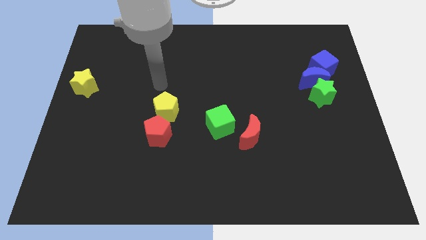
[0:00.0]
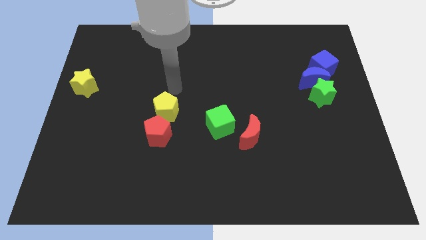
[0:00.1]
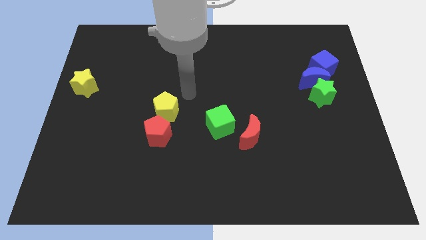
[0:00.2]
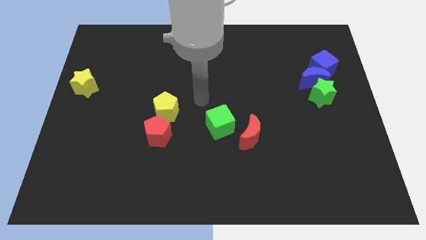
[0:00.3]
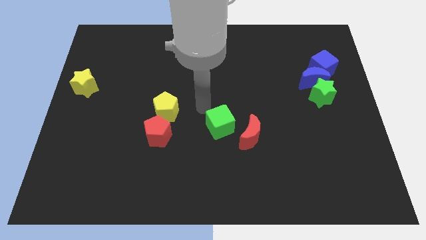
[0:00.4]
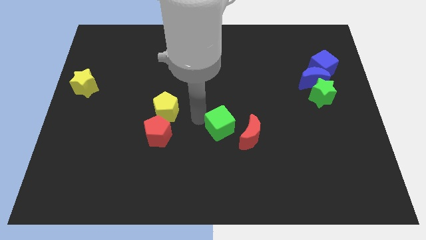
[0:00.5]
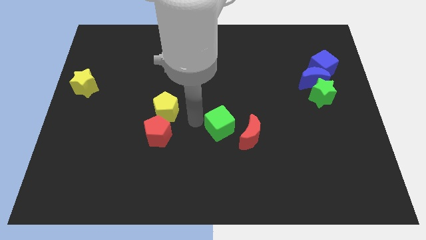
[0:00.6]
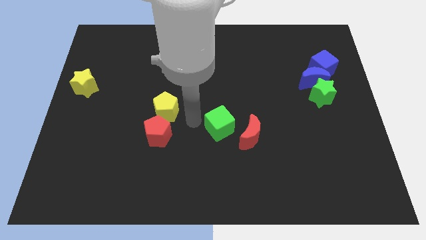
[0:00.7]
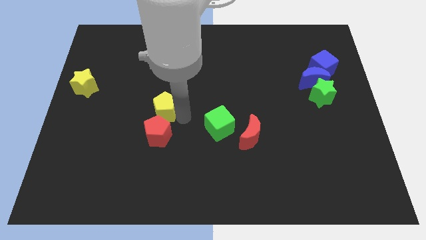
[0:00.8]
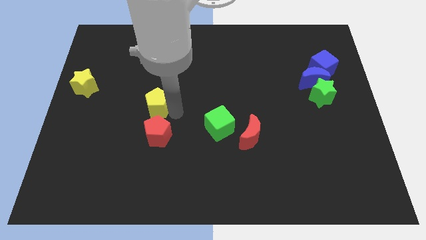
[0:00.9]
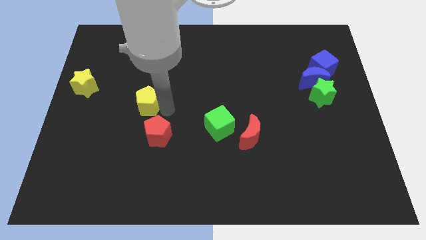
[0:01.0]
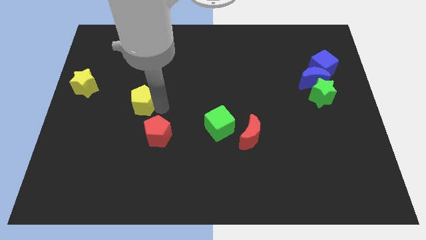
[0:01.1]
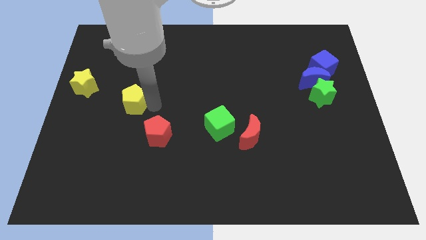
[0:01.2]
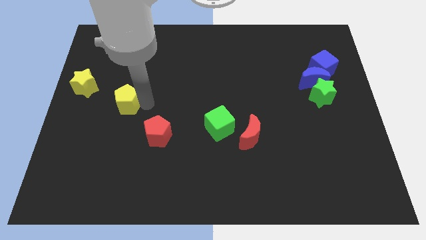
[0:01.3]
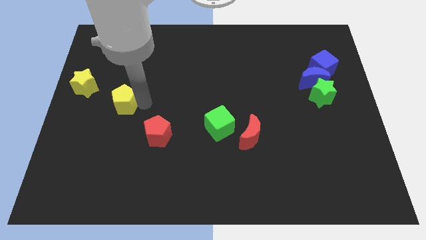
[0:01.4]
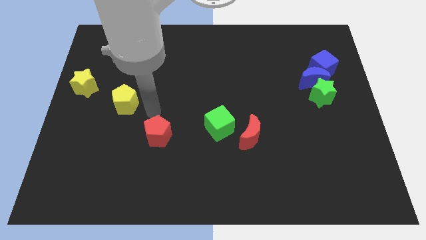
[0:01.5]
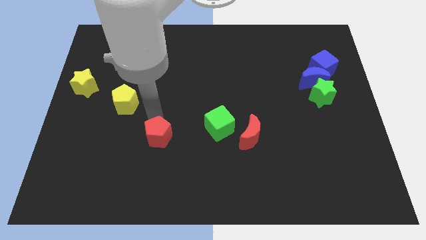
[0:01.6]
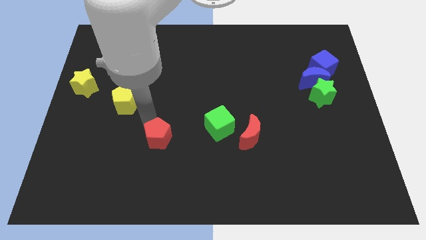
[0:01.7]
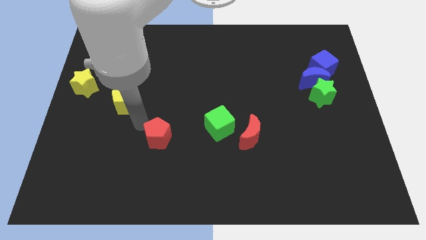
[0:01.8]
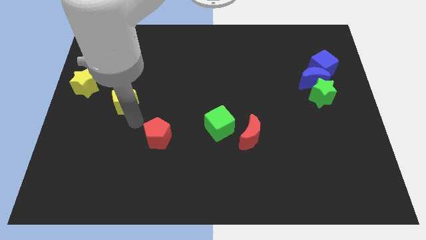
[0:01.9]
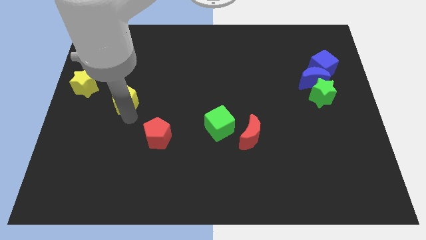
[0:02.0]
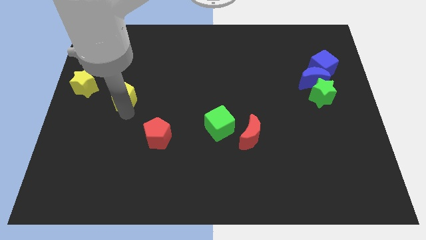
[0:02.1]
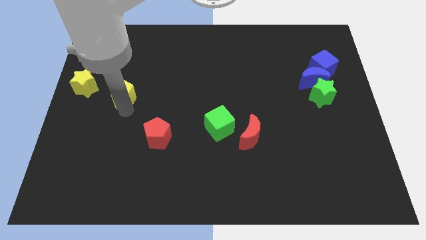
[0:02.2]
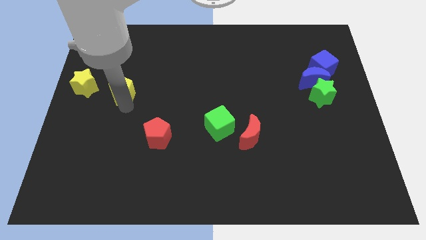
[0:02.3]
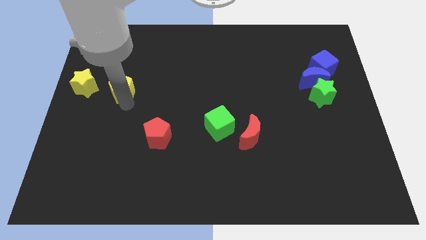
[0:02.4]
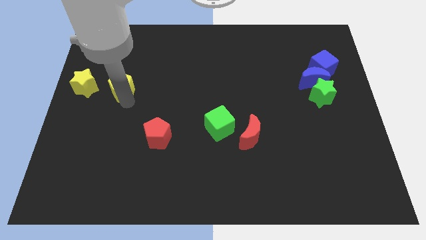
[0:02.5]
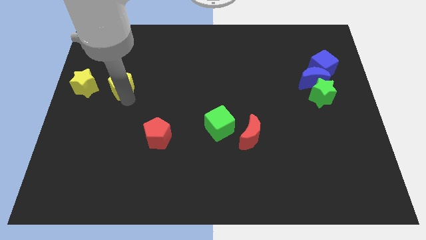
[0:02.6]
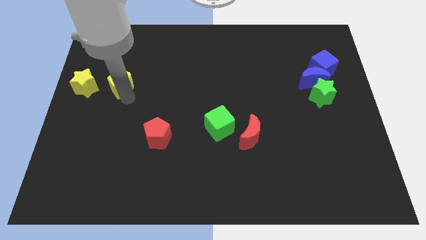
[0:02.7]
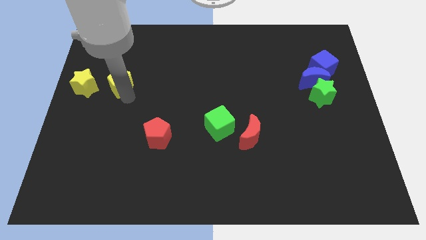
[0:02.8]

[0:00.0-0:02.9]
push yellow pentagon beside yellow star

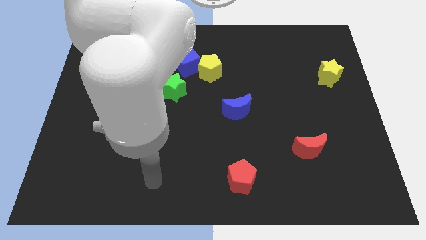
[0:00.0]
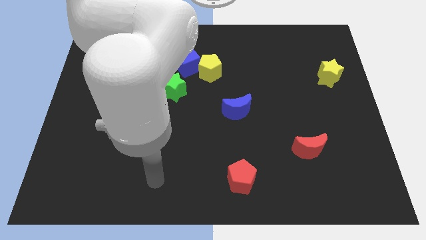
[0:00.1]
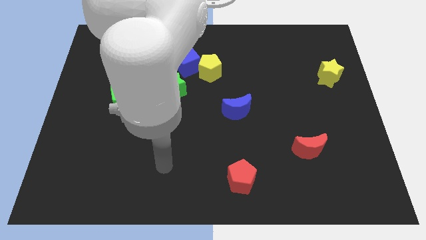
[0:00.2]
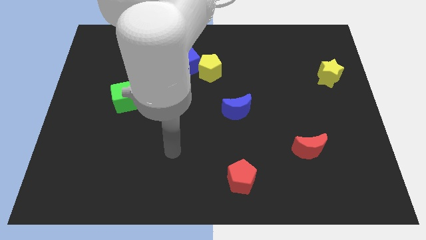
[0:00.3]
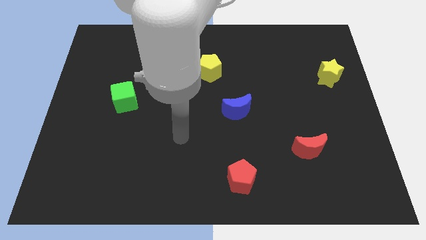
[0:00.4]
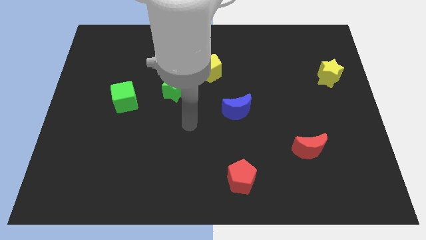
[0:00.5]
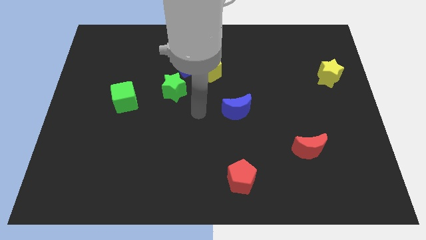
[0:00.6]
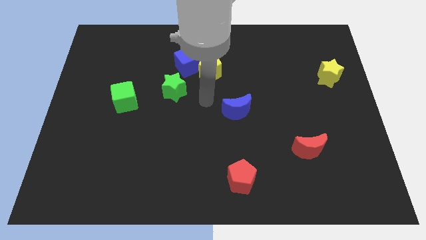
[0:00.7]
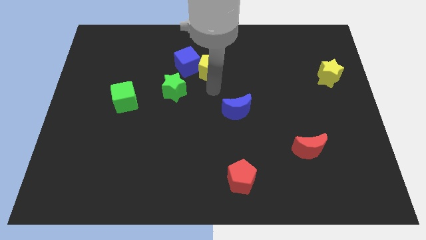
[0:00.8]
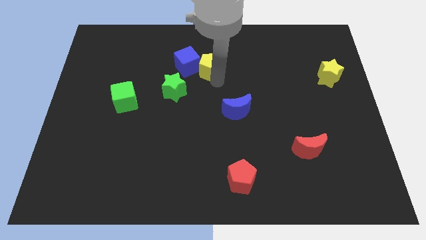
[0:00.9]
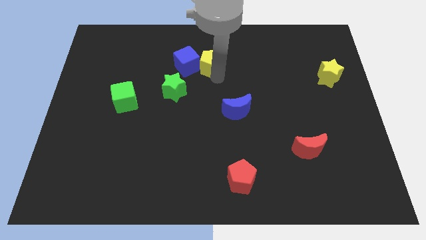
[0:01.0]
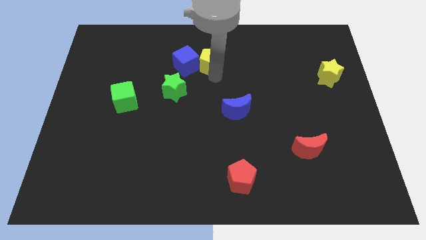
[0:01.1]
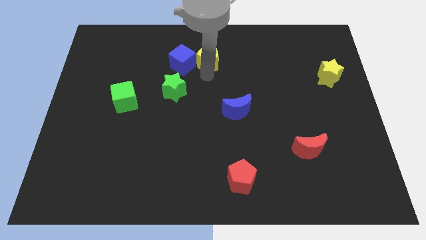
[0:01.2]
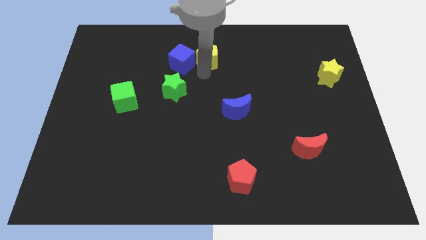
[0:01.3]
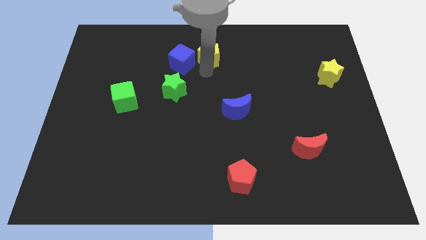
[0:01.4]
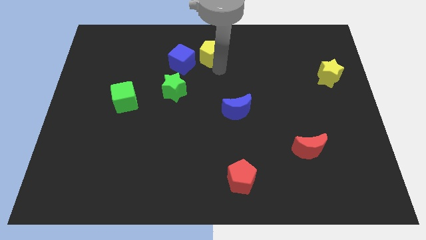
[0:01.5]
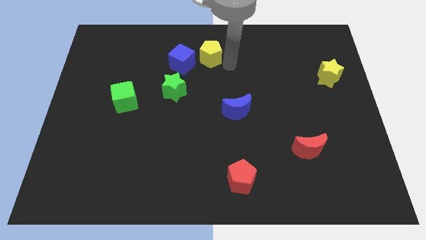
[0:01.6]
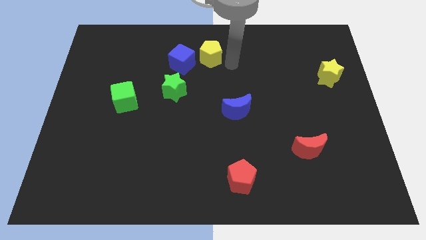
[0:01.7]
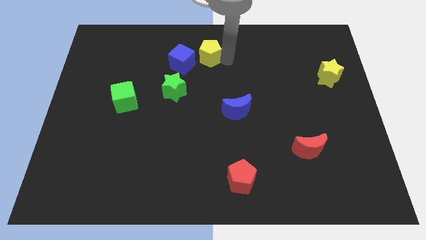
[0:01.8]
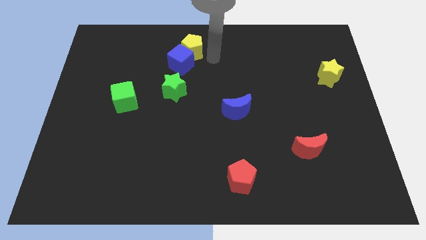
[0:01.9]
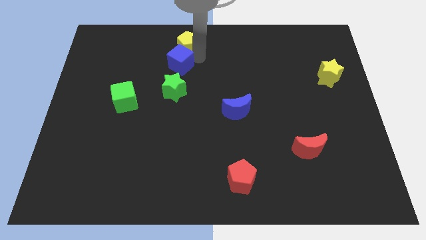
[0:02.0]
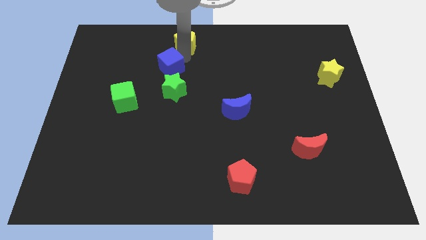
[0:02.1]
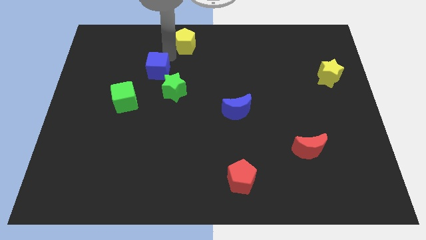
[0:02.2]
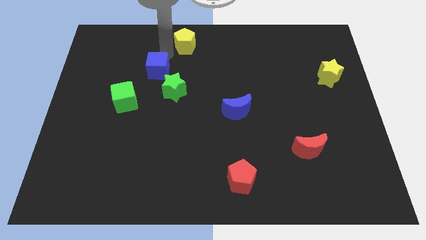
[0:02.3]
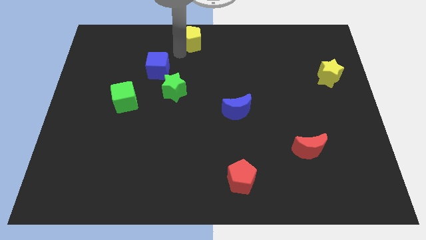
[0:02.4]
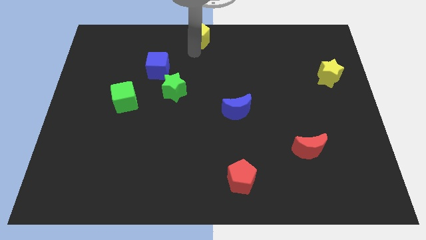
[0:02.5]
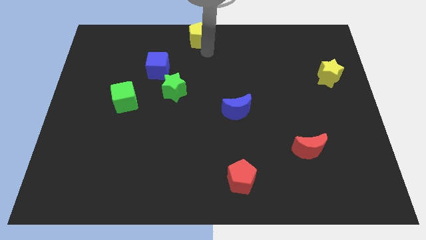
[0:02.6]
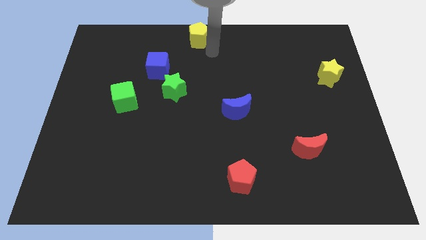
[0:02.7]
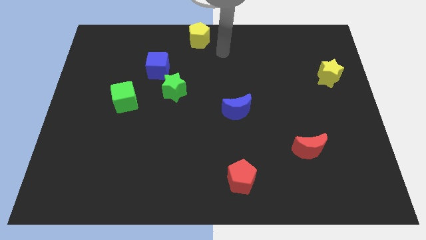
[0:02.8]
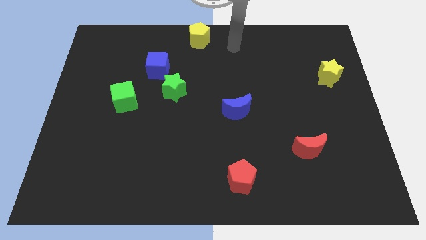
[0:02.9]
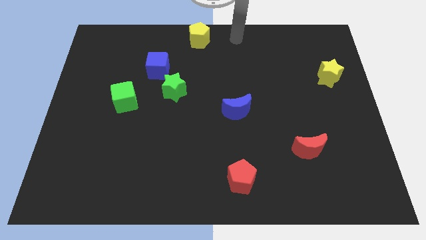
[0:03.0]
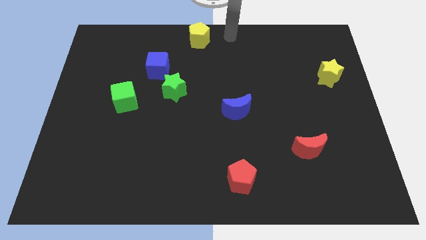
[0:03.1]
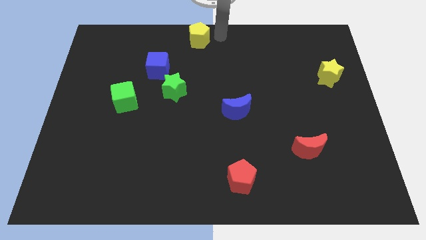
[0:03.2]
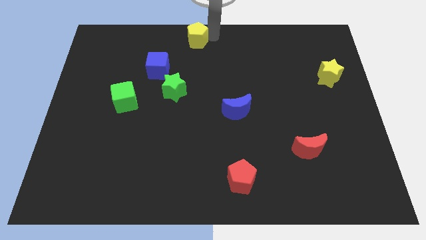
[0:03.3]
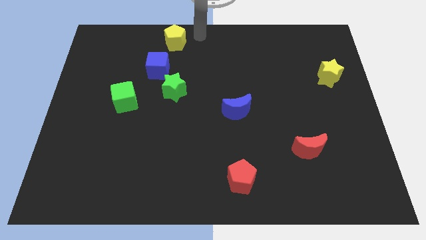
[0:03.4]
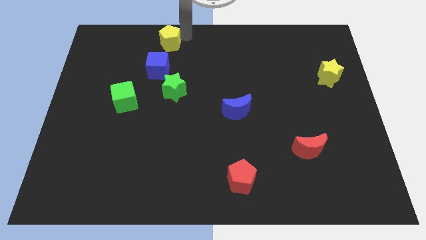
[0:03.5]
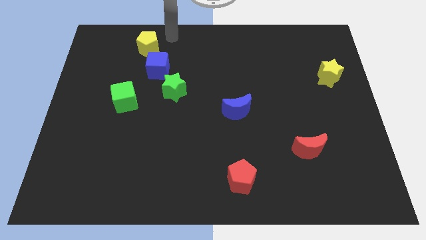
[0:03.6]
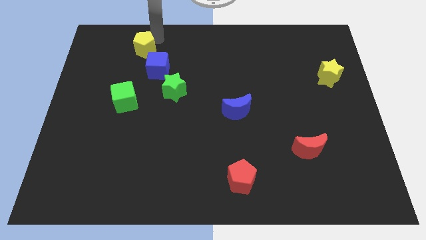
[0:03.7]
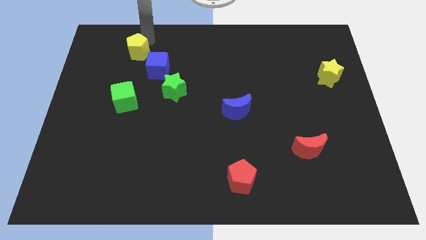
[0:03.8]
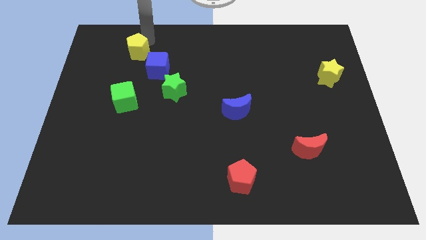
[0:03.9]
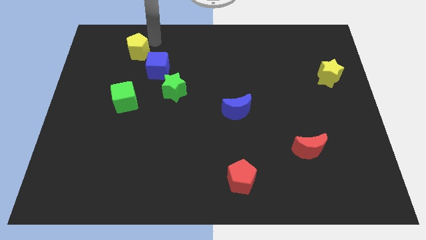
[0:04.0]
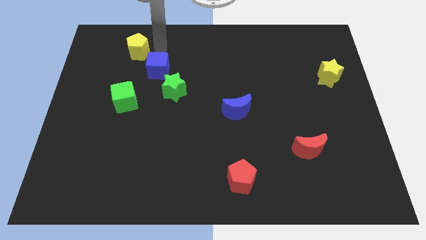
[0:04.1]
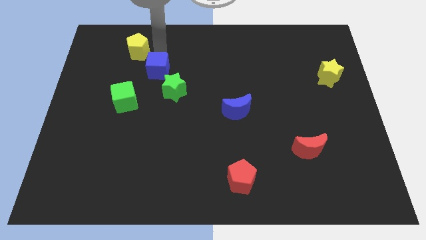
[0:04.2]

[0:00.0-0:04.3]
place the yellow pentagon close to the blue cube

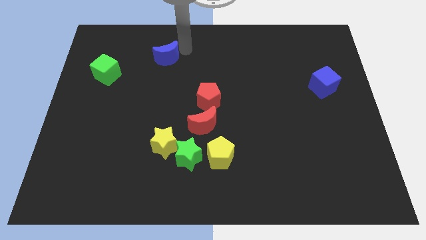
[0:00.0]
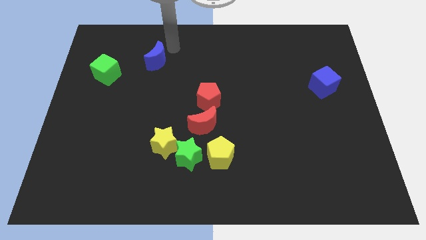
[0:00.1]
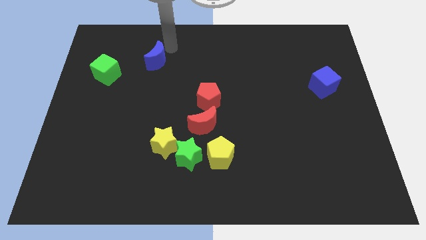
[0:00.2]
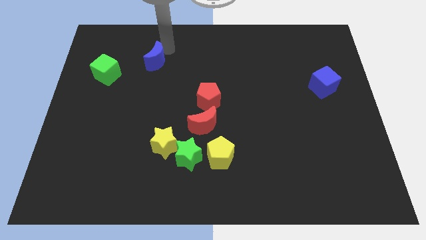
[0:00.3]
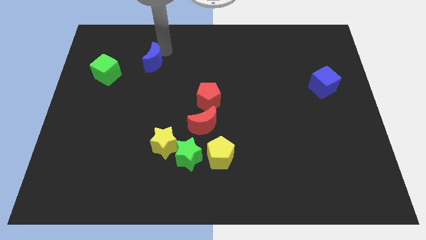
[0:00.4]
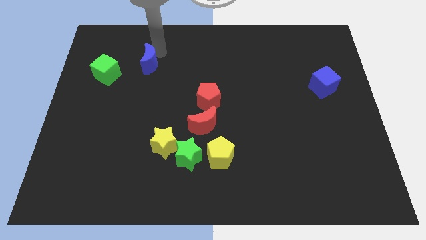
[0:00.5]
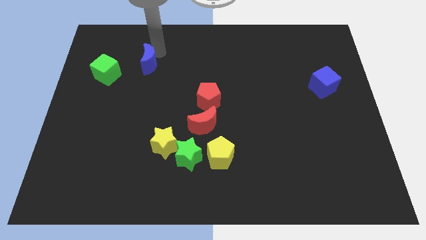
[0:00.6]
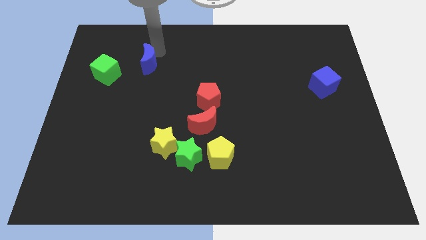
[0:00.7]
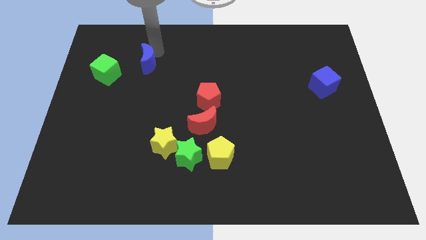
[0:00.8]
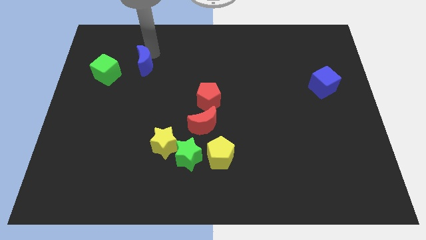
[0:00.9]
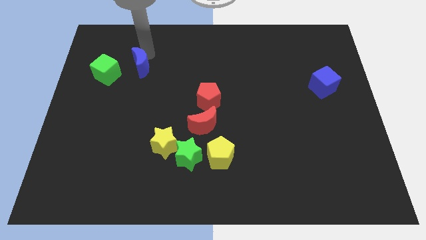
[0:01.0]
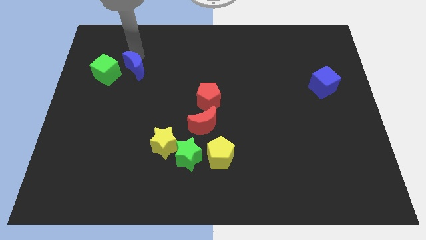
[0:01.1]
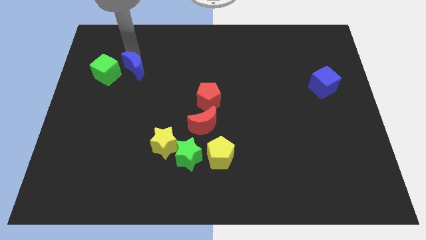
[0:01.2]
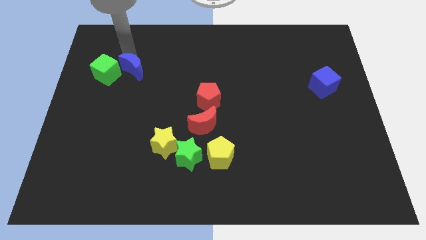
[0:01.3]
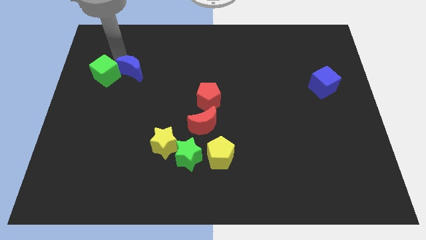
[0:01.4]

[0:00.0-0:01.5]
move the blue crescent close to the green cube

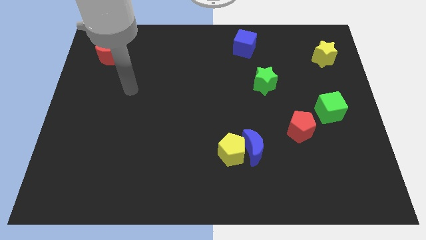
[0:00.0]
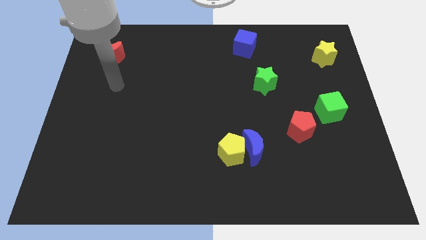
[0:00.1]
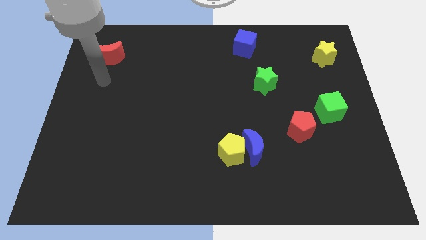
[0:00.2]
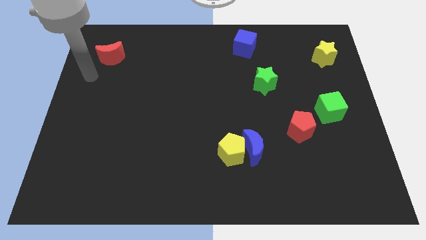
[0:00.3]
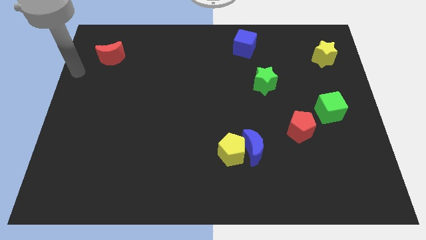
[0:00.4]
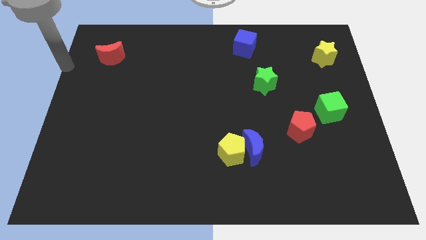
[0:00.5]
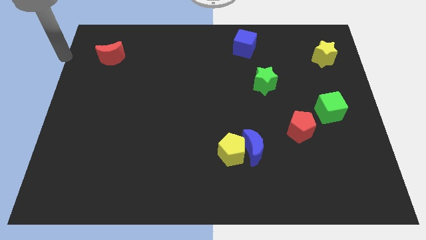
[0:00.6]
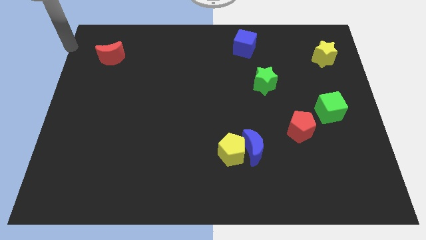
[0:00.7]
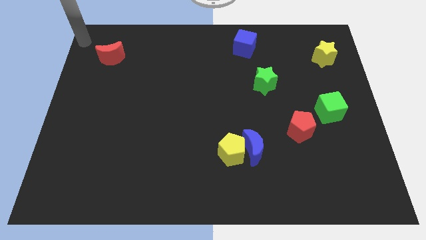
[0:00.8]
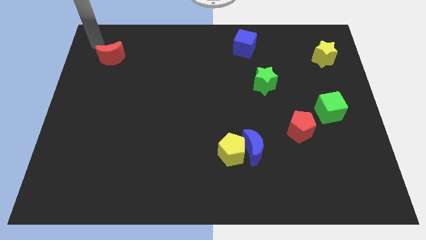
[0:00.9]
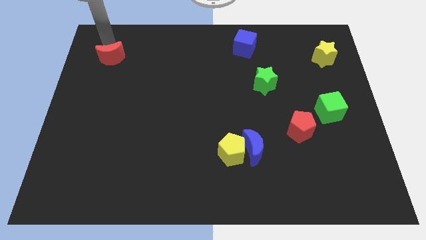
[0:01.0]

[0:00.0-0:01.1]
move the arm above the red crescent
